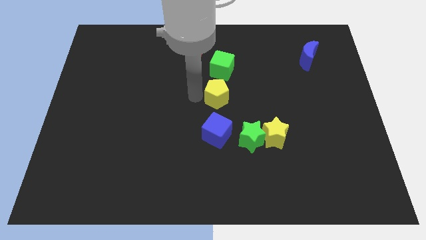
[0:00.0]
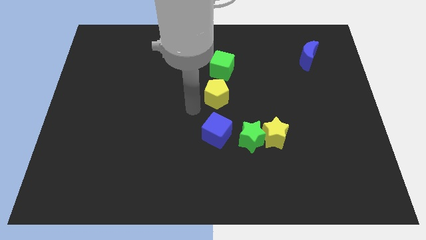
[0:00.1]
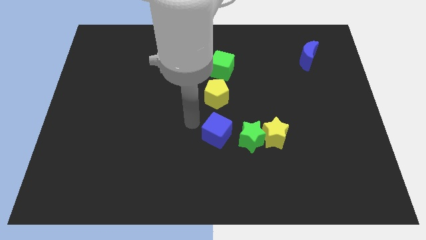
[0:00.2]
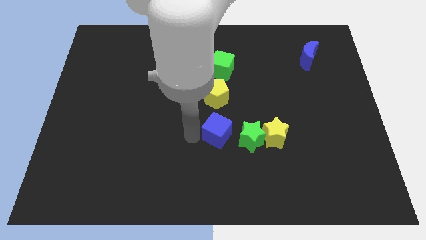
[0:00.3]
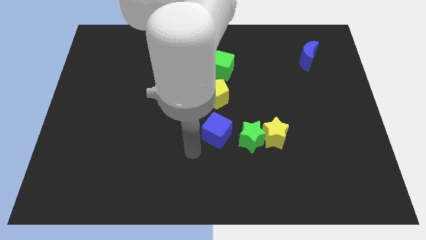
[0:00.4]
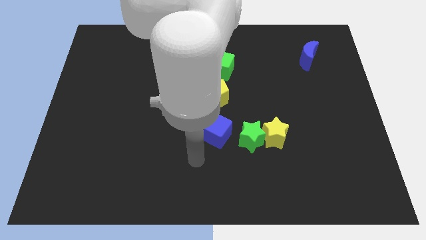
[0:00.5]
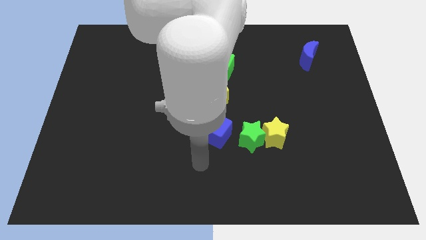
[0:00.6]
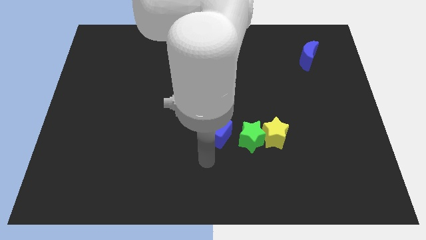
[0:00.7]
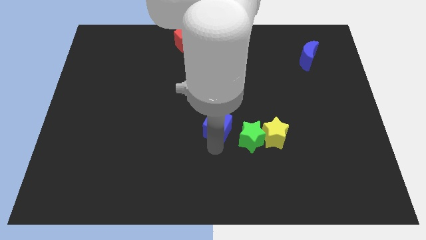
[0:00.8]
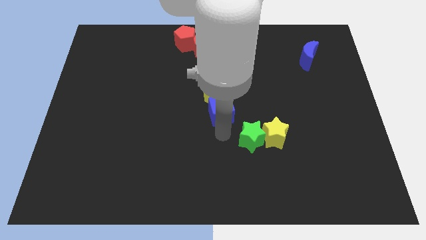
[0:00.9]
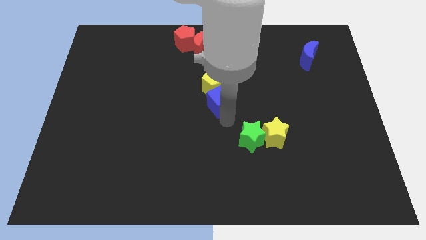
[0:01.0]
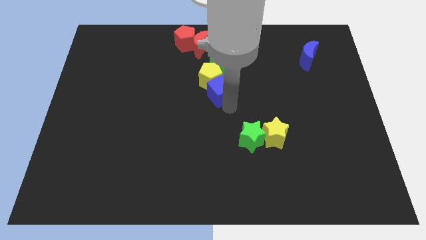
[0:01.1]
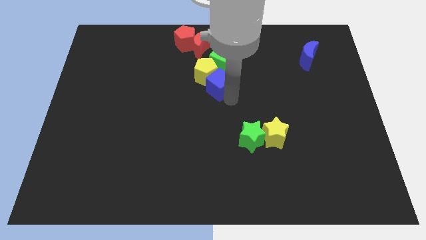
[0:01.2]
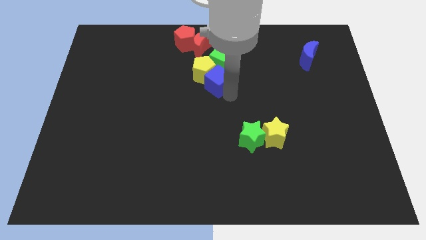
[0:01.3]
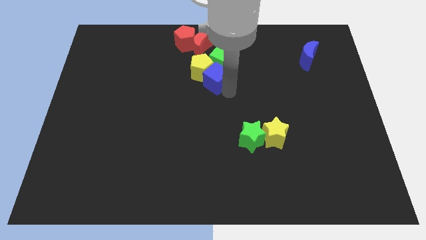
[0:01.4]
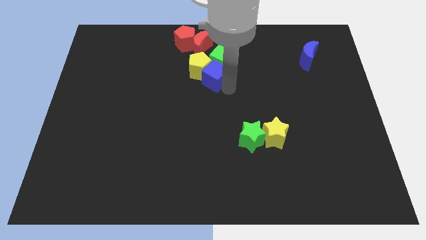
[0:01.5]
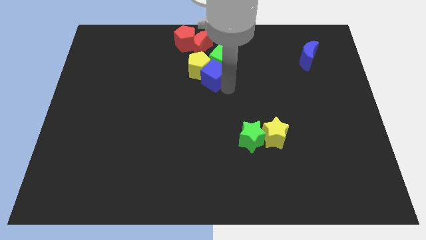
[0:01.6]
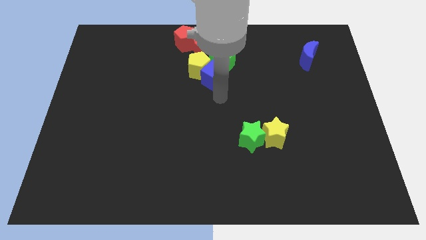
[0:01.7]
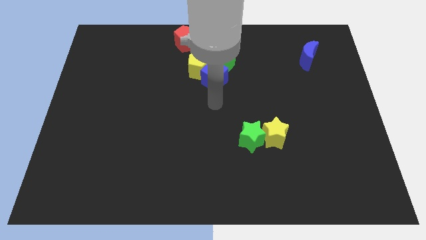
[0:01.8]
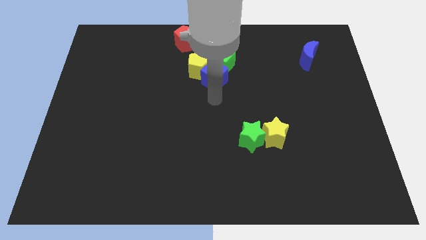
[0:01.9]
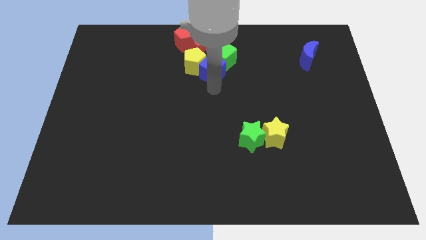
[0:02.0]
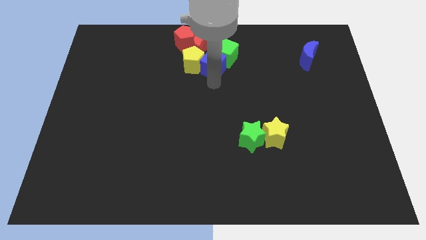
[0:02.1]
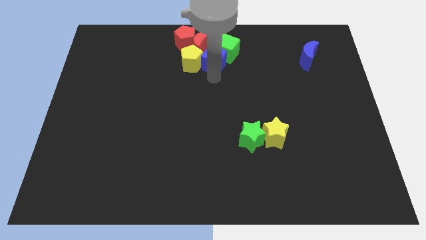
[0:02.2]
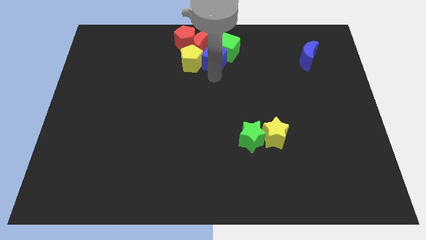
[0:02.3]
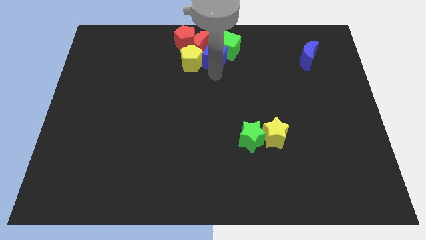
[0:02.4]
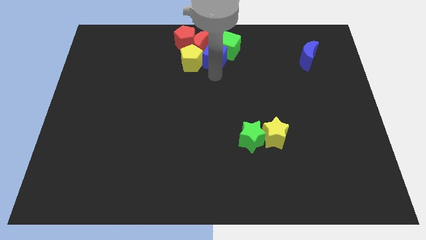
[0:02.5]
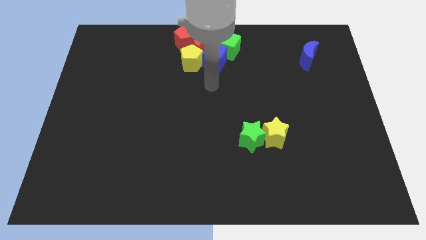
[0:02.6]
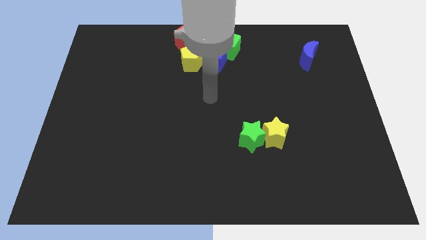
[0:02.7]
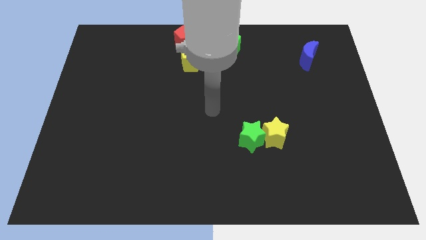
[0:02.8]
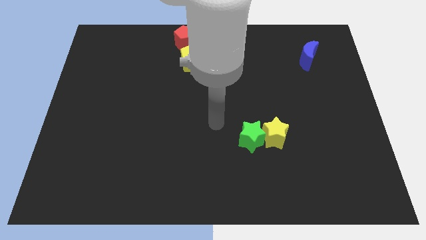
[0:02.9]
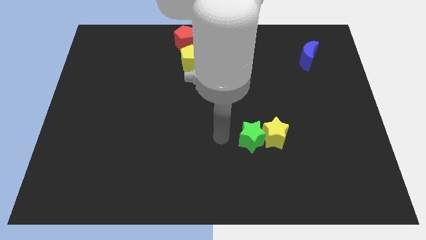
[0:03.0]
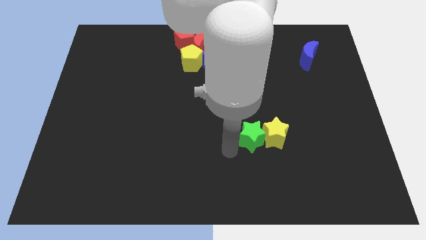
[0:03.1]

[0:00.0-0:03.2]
push blue cube in to yellow pentagon

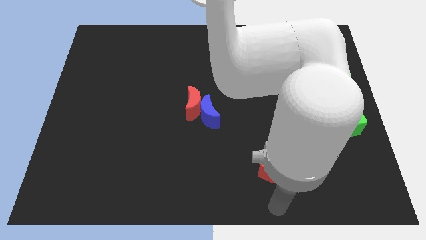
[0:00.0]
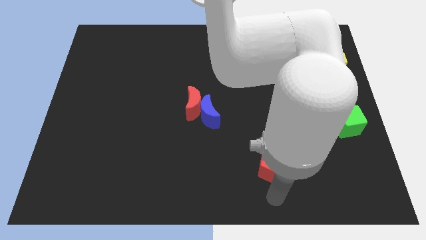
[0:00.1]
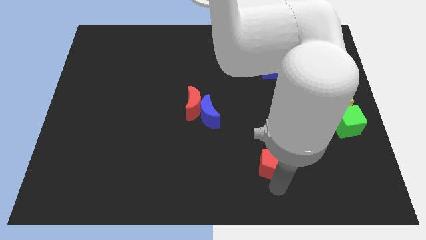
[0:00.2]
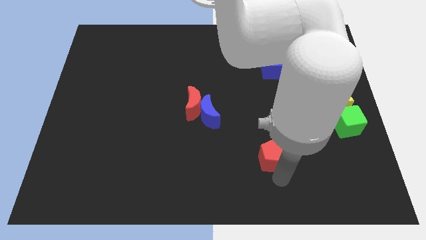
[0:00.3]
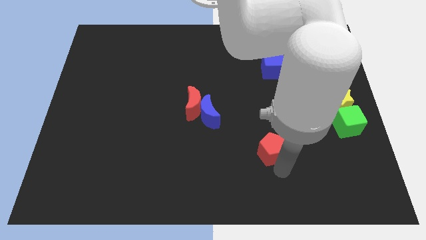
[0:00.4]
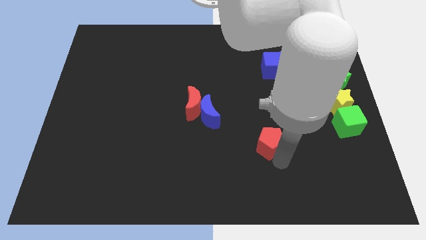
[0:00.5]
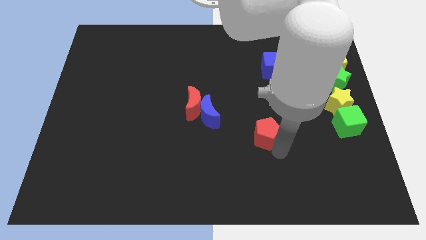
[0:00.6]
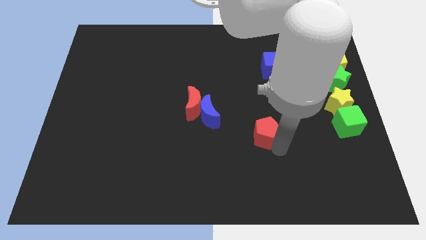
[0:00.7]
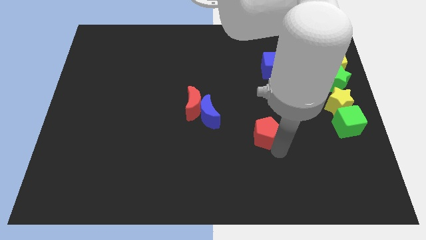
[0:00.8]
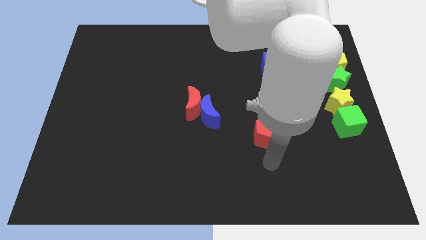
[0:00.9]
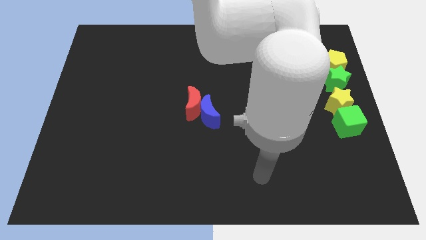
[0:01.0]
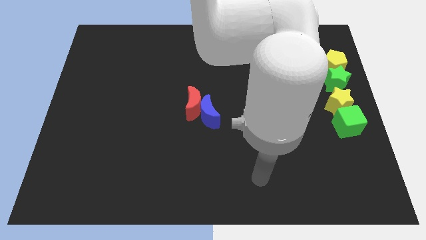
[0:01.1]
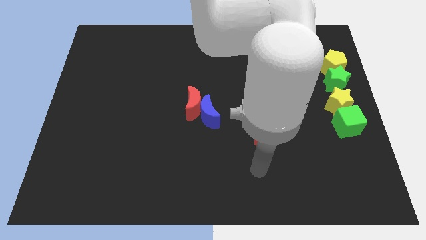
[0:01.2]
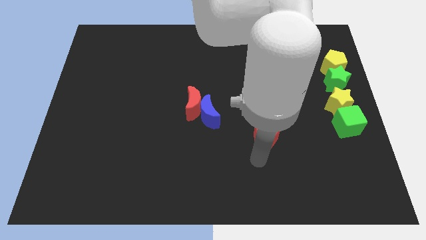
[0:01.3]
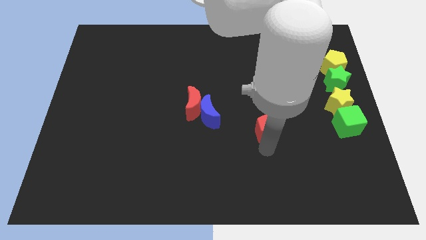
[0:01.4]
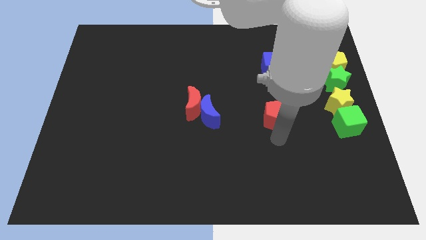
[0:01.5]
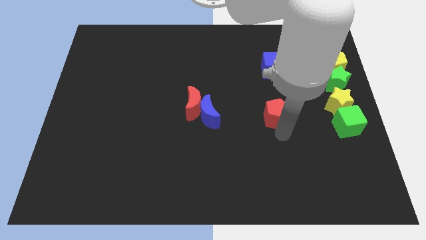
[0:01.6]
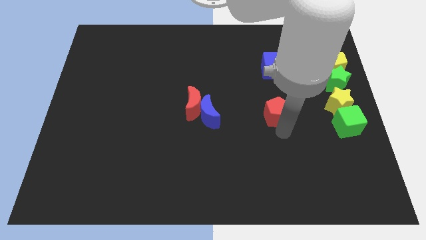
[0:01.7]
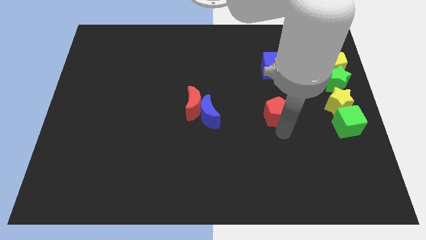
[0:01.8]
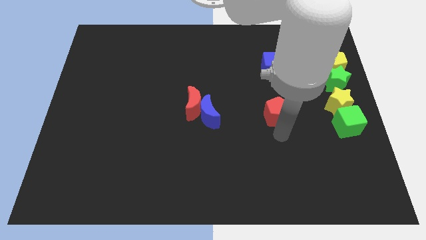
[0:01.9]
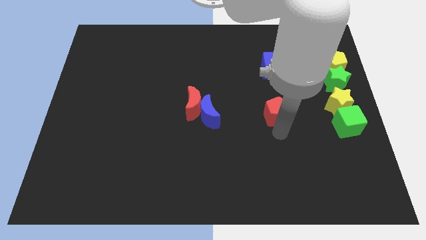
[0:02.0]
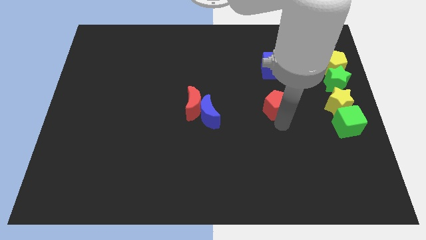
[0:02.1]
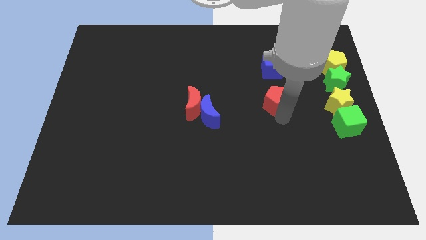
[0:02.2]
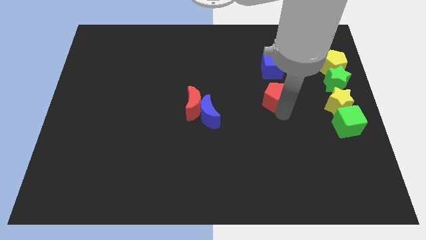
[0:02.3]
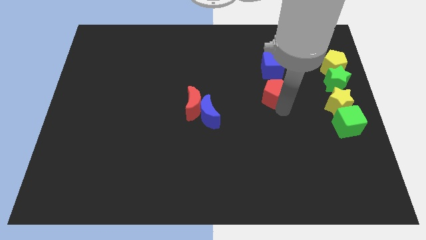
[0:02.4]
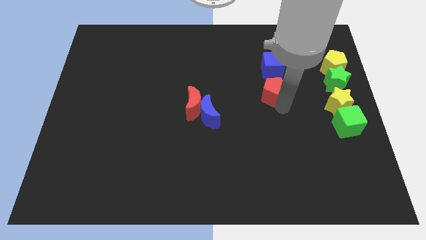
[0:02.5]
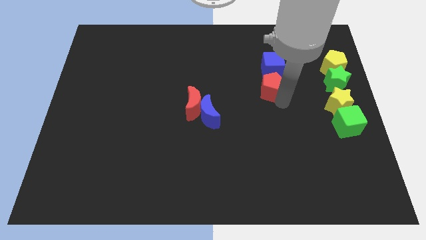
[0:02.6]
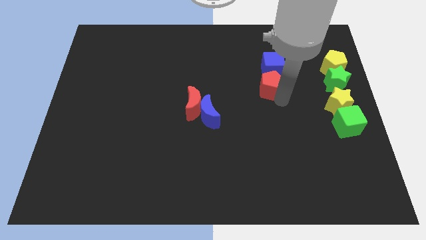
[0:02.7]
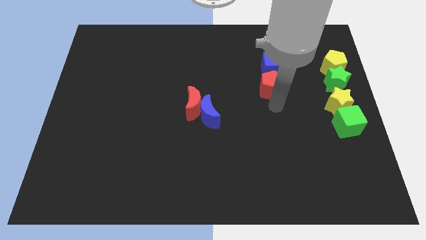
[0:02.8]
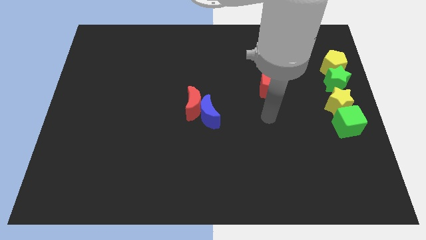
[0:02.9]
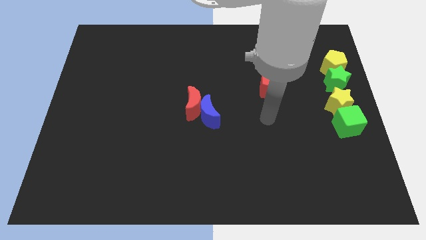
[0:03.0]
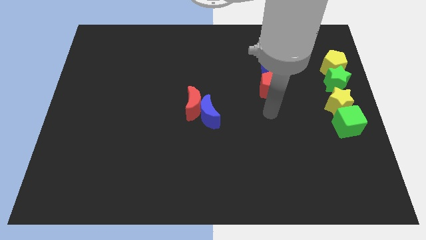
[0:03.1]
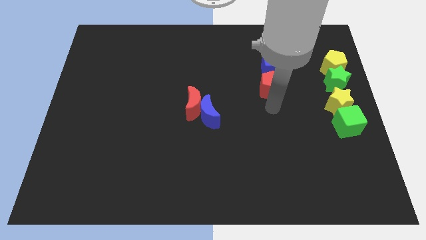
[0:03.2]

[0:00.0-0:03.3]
place the red pentagon at the bottom side of the blue cube

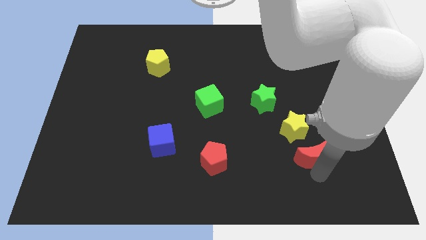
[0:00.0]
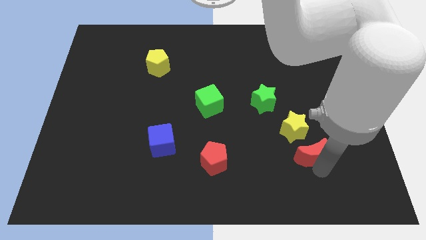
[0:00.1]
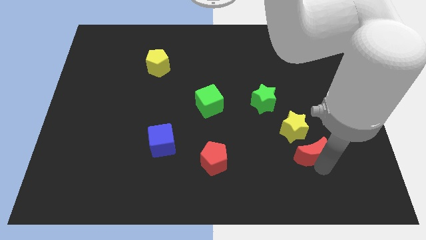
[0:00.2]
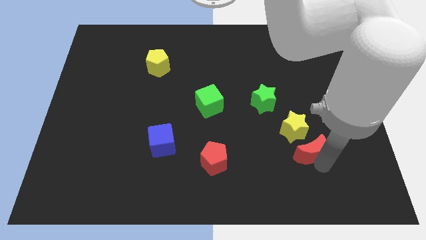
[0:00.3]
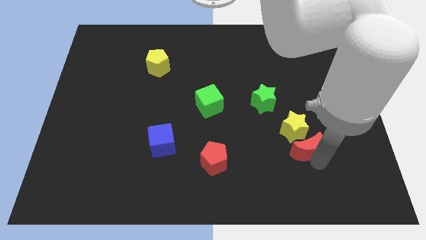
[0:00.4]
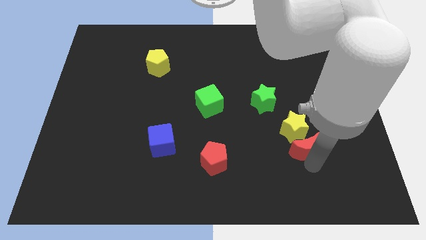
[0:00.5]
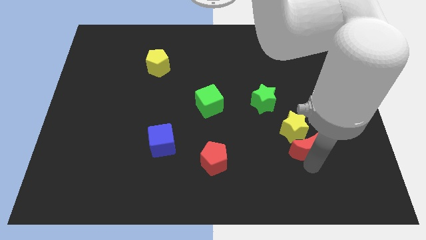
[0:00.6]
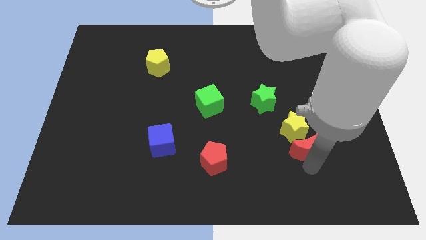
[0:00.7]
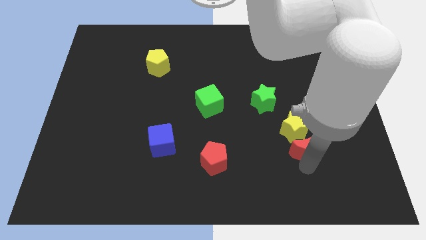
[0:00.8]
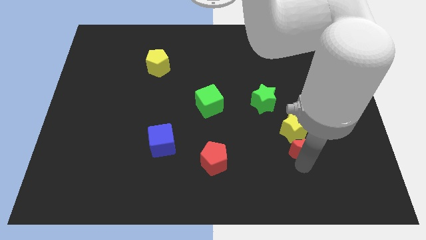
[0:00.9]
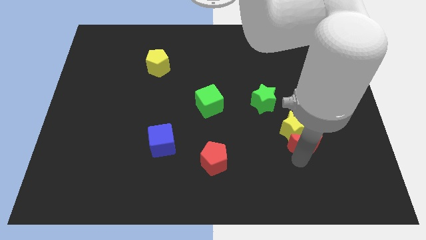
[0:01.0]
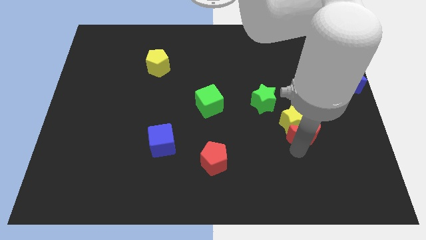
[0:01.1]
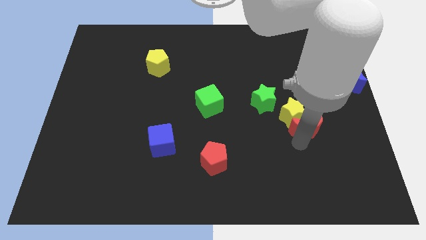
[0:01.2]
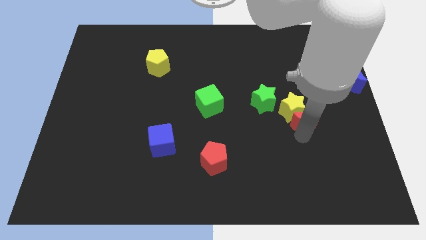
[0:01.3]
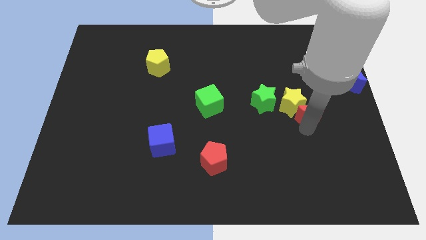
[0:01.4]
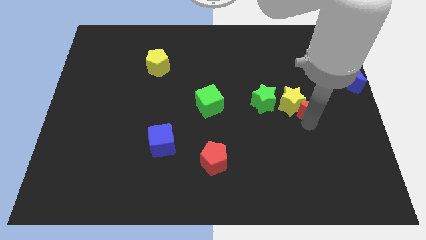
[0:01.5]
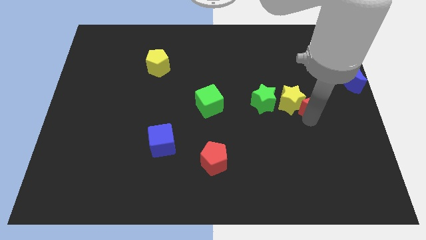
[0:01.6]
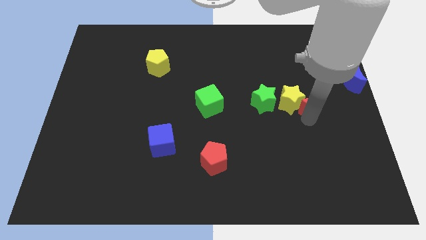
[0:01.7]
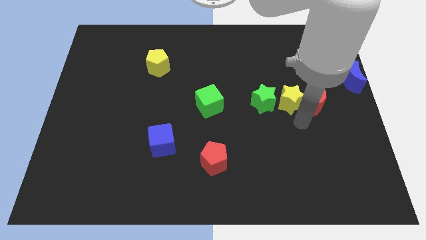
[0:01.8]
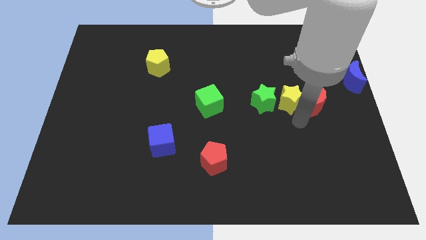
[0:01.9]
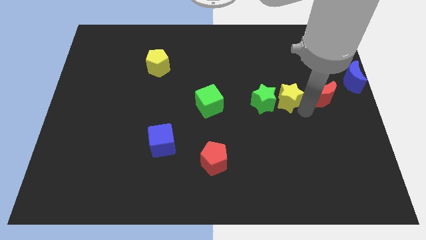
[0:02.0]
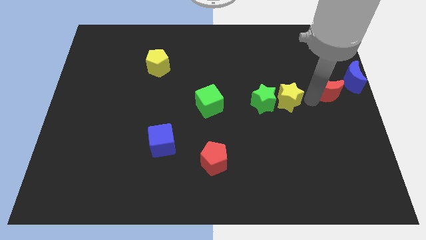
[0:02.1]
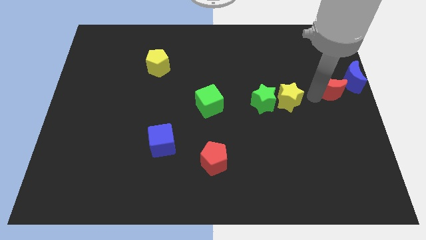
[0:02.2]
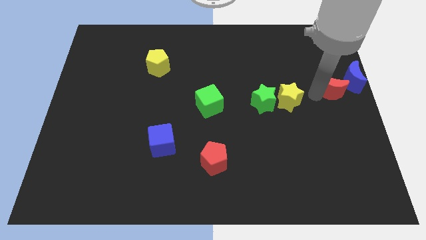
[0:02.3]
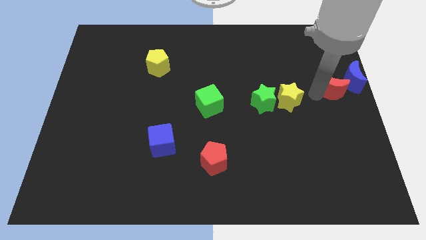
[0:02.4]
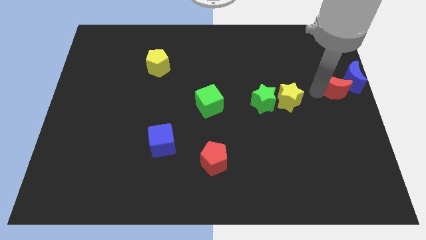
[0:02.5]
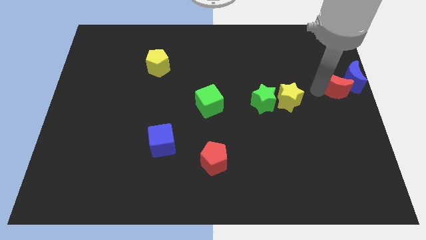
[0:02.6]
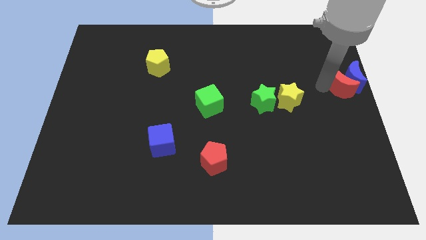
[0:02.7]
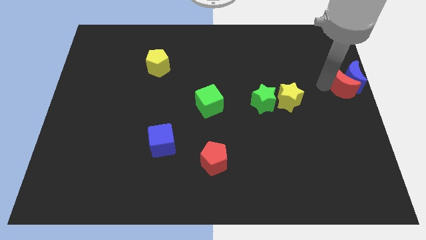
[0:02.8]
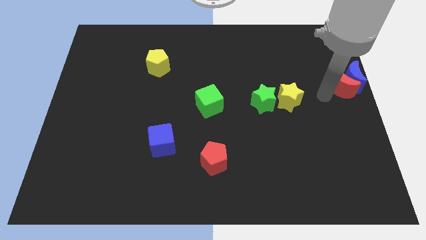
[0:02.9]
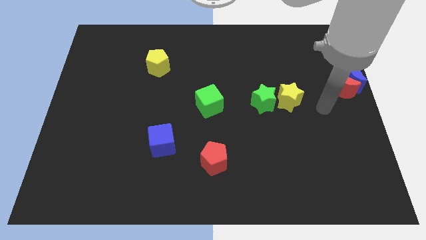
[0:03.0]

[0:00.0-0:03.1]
move the red moon closer to the blue moon
